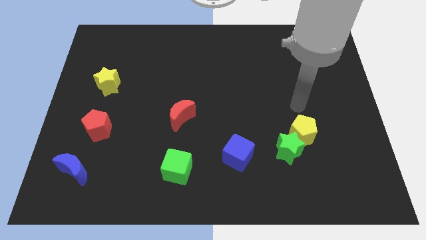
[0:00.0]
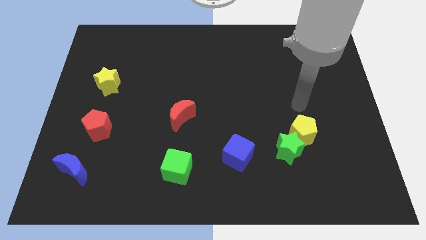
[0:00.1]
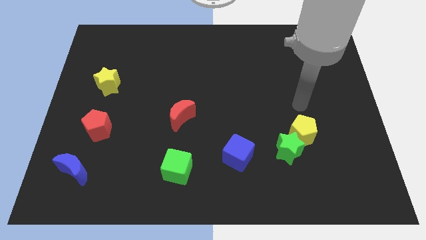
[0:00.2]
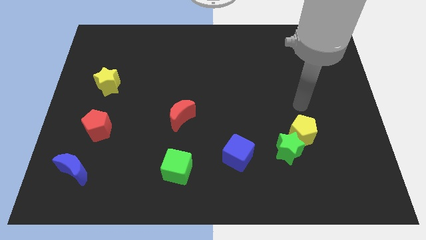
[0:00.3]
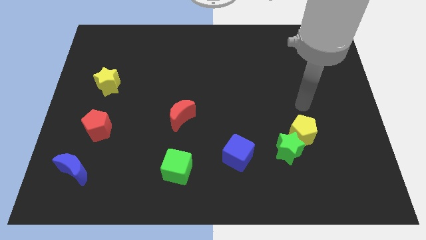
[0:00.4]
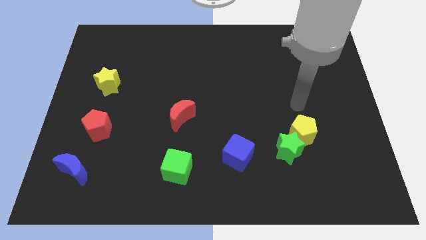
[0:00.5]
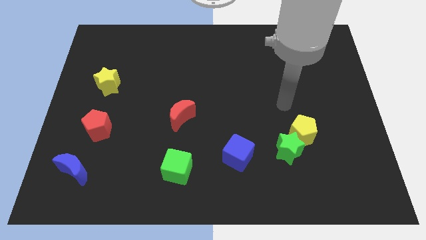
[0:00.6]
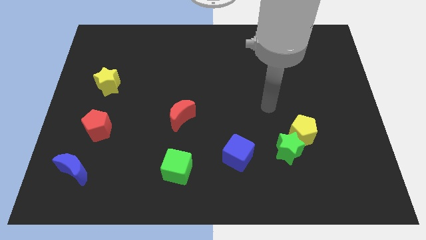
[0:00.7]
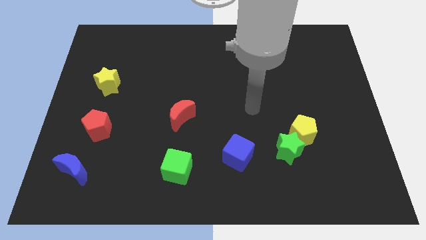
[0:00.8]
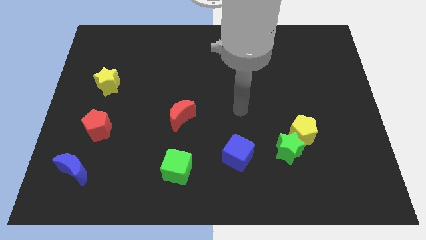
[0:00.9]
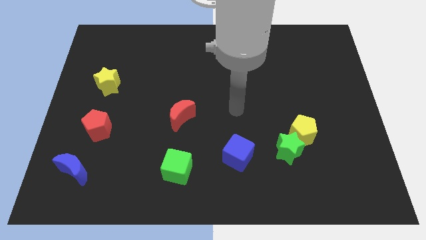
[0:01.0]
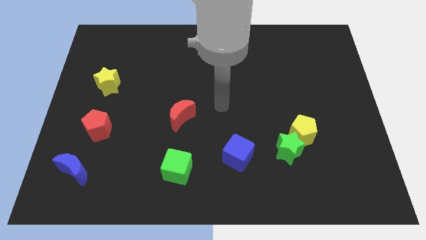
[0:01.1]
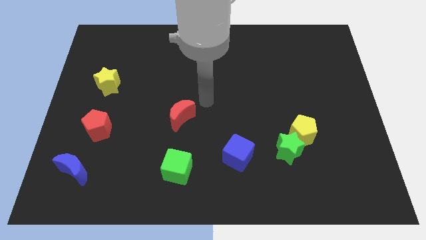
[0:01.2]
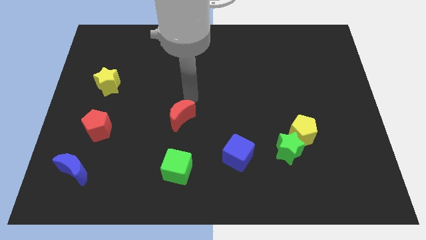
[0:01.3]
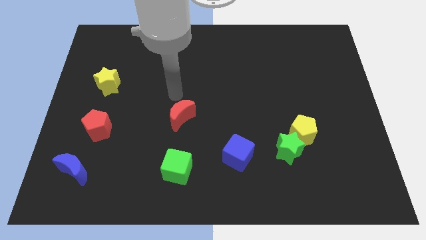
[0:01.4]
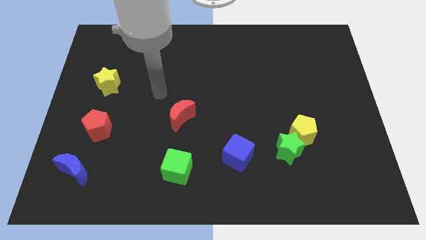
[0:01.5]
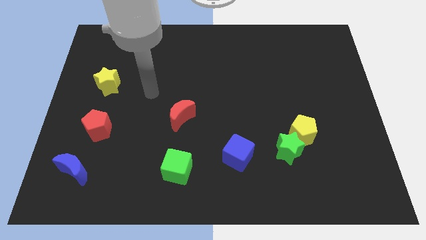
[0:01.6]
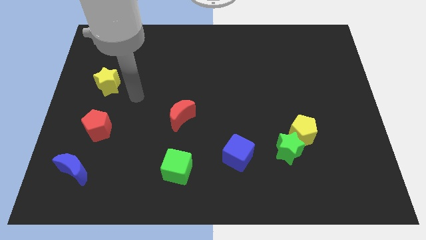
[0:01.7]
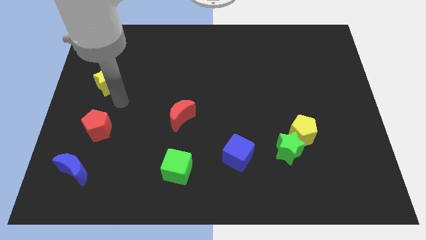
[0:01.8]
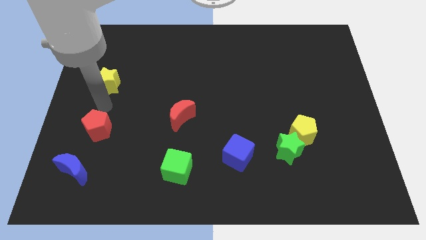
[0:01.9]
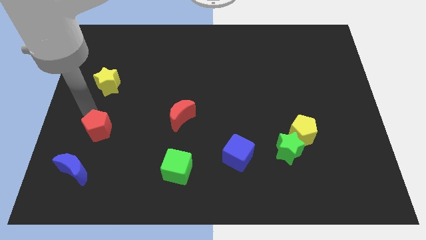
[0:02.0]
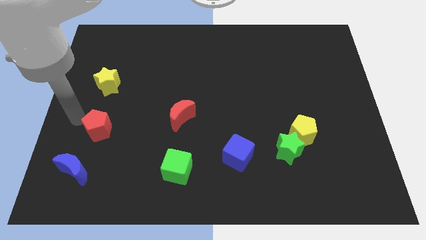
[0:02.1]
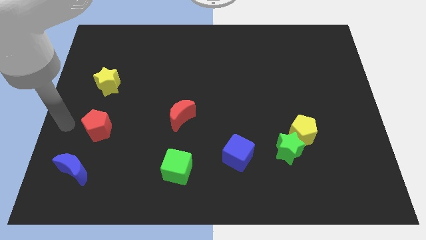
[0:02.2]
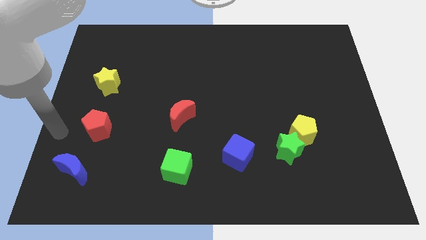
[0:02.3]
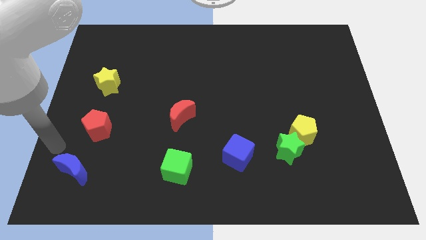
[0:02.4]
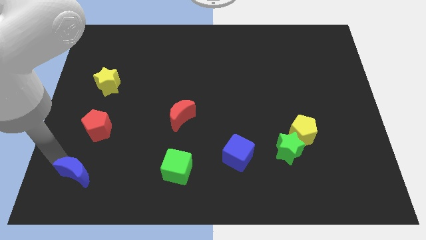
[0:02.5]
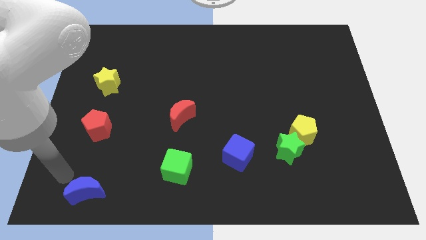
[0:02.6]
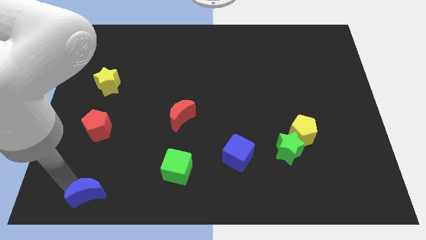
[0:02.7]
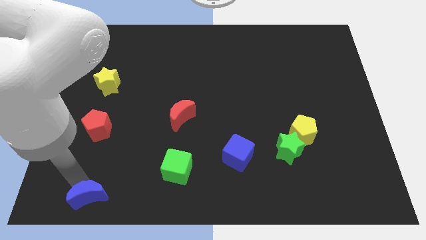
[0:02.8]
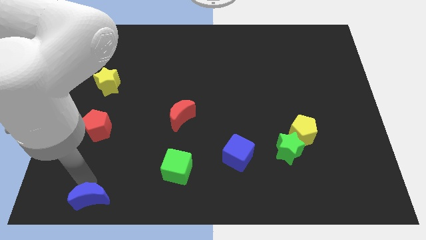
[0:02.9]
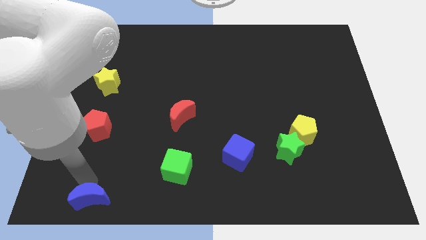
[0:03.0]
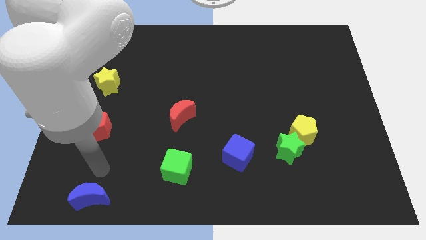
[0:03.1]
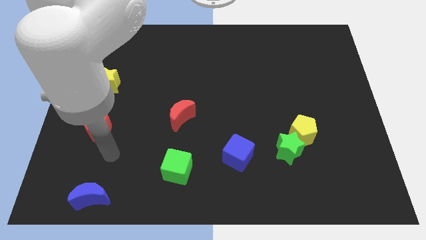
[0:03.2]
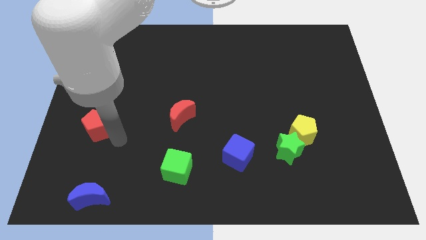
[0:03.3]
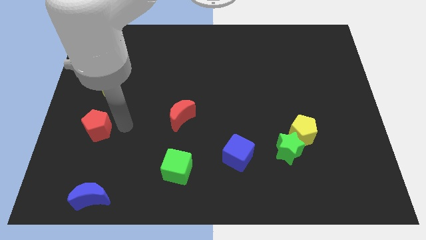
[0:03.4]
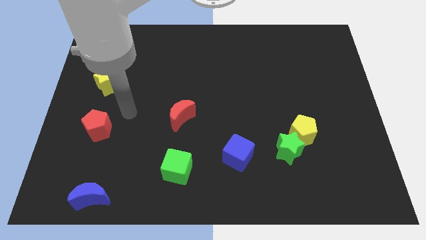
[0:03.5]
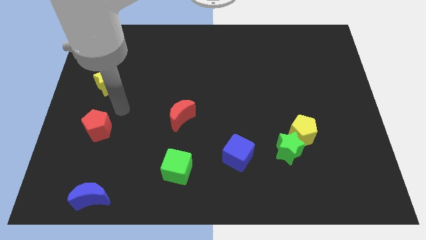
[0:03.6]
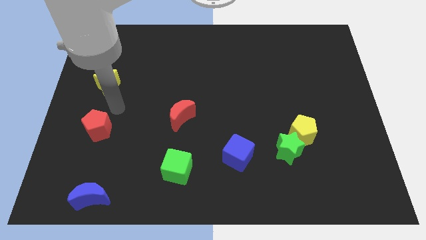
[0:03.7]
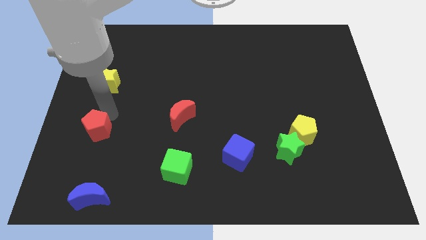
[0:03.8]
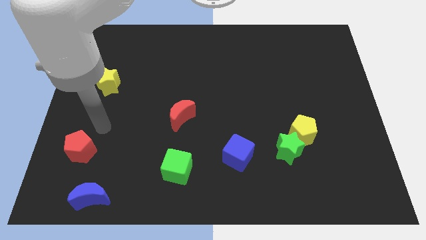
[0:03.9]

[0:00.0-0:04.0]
move the blue moon to the bottom left side of the board

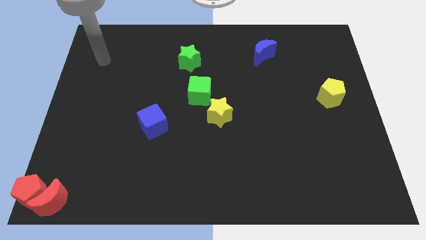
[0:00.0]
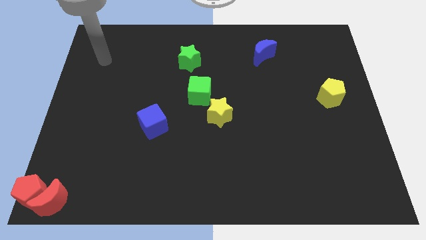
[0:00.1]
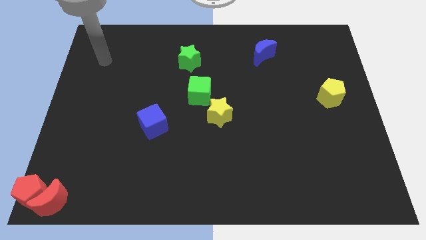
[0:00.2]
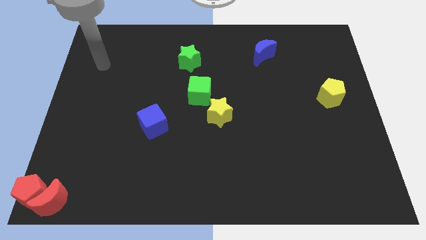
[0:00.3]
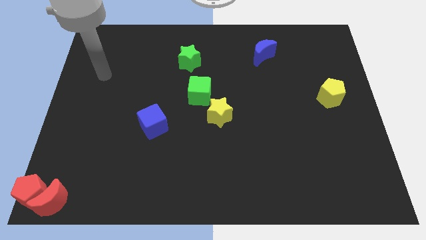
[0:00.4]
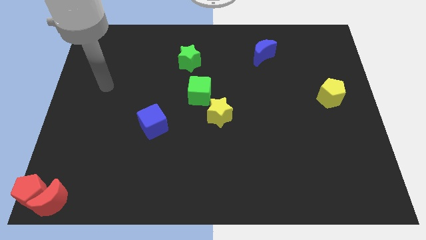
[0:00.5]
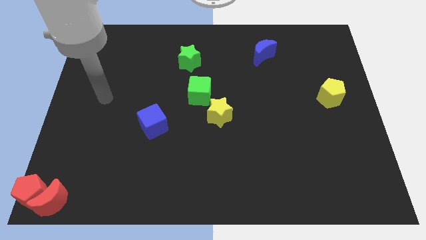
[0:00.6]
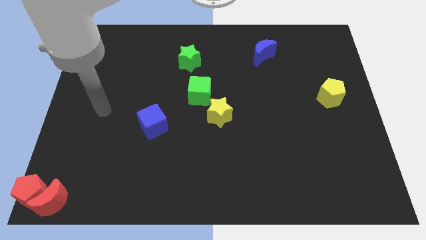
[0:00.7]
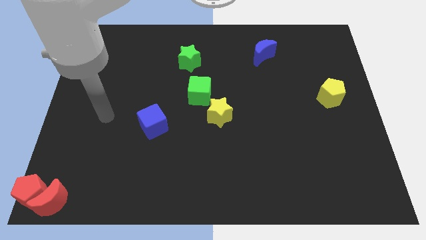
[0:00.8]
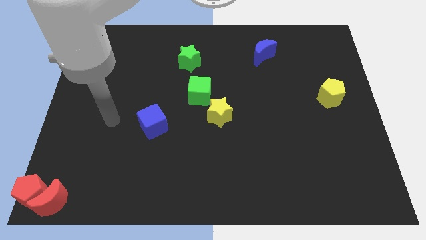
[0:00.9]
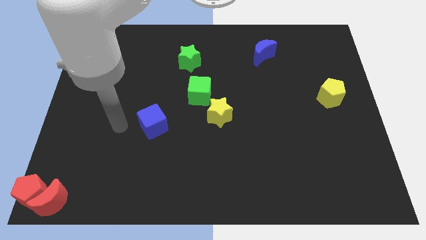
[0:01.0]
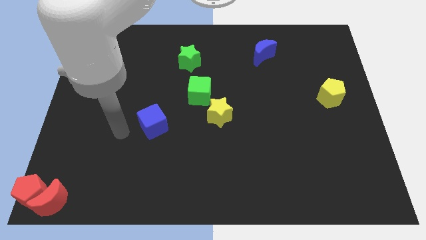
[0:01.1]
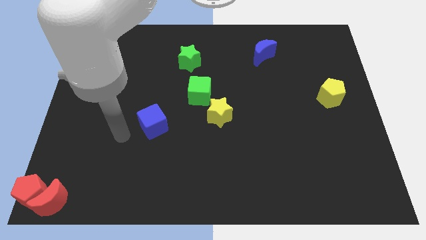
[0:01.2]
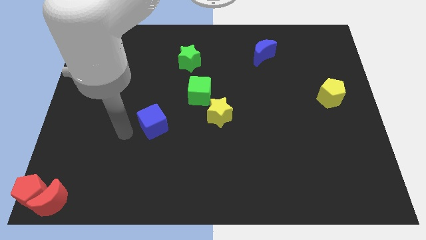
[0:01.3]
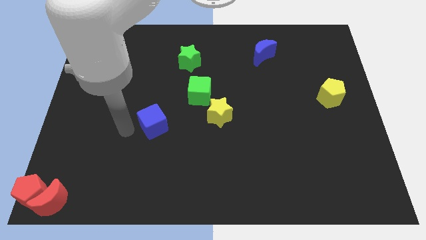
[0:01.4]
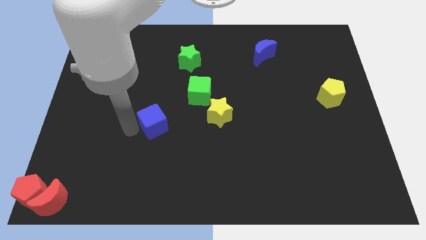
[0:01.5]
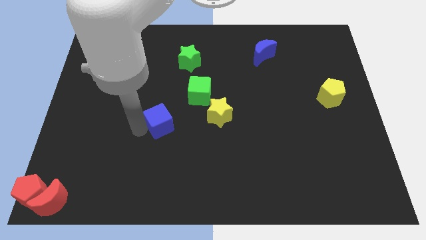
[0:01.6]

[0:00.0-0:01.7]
tap the blue cube on left

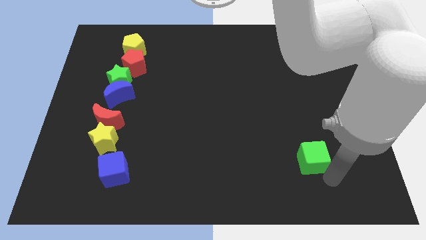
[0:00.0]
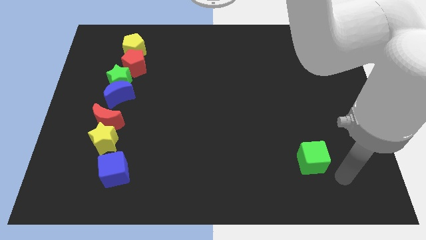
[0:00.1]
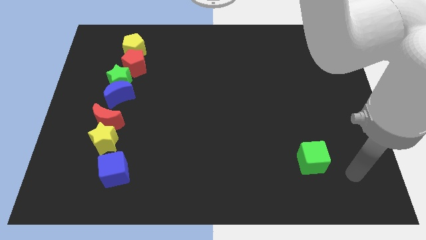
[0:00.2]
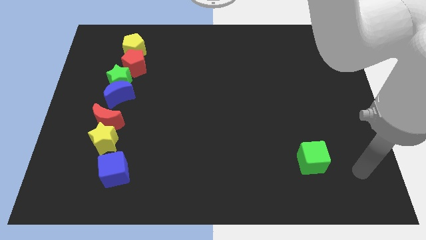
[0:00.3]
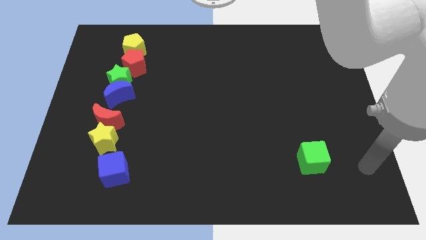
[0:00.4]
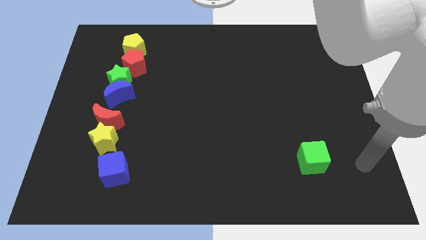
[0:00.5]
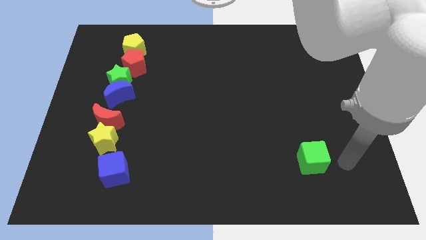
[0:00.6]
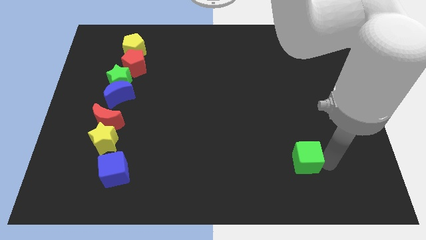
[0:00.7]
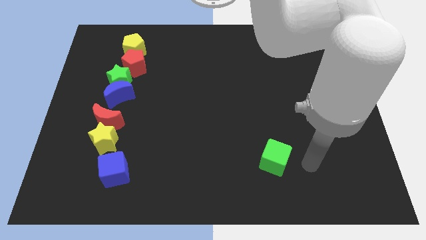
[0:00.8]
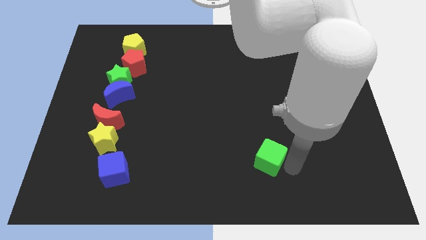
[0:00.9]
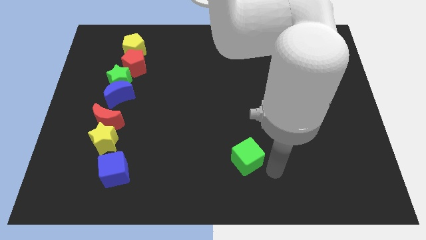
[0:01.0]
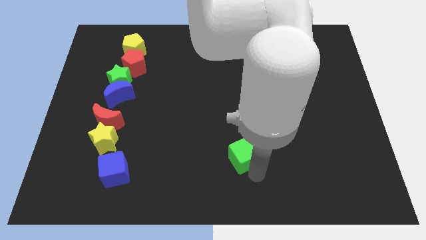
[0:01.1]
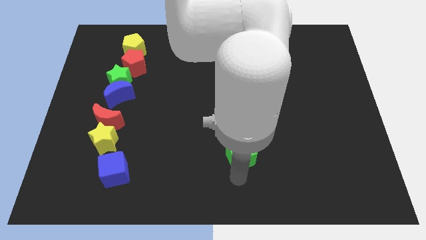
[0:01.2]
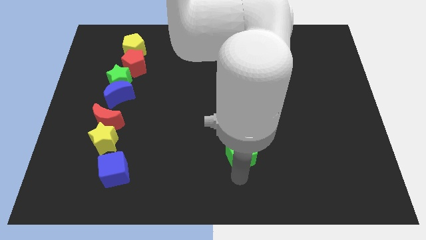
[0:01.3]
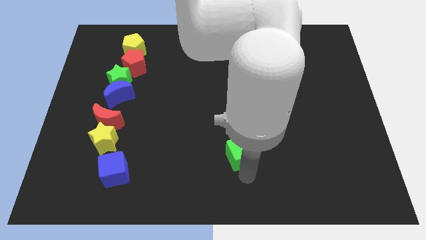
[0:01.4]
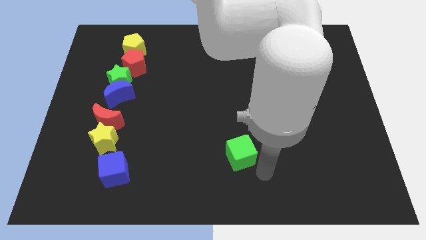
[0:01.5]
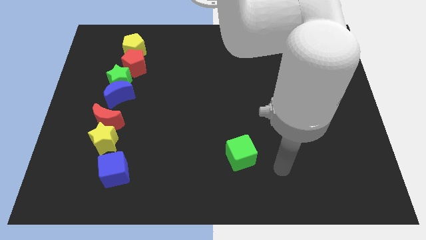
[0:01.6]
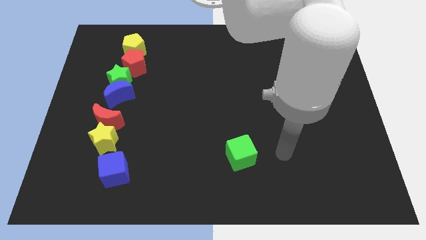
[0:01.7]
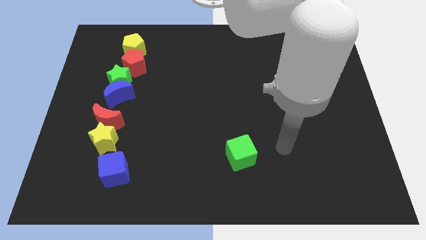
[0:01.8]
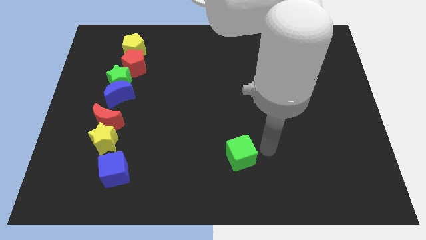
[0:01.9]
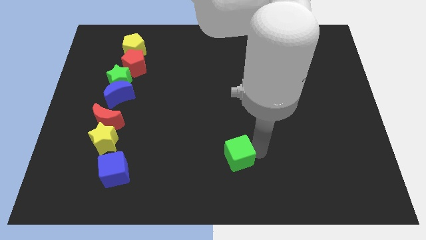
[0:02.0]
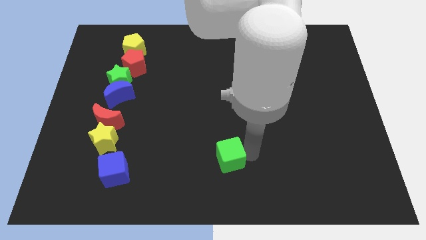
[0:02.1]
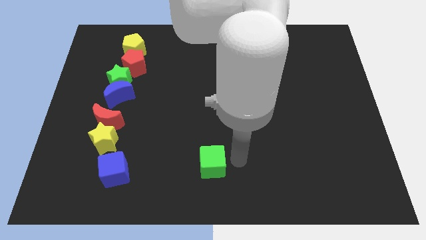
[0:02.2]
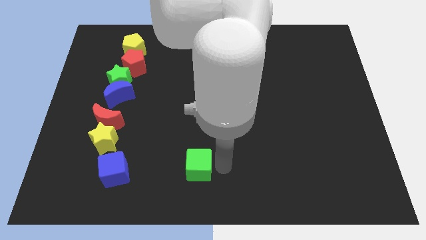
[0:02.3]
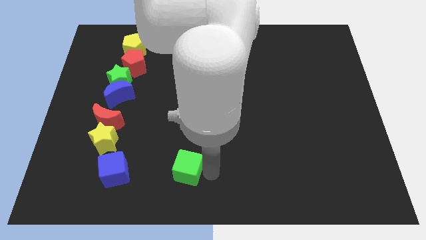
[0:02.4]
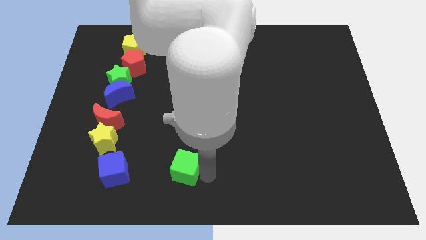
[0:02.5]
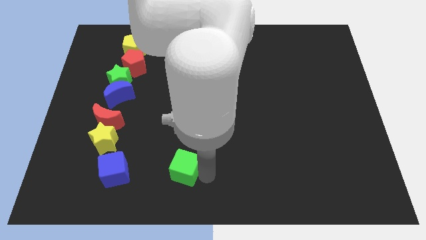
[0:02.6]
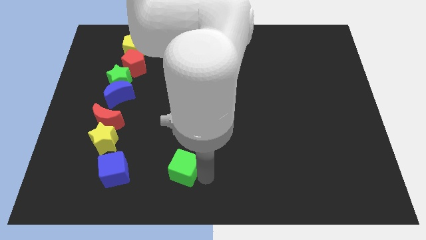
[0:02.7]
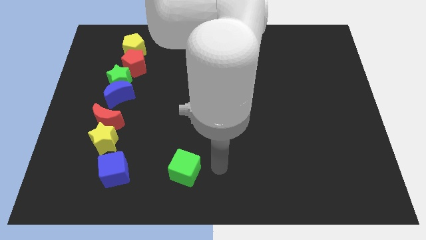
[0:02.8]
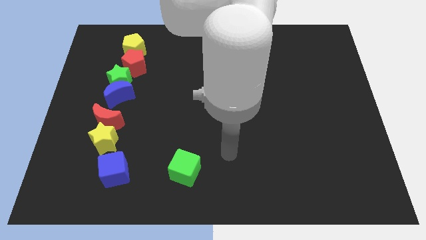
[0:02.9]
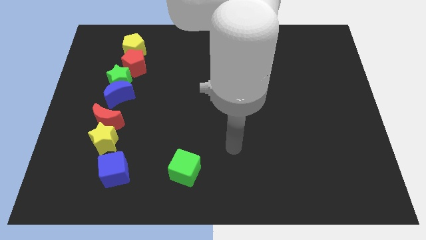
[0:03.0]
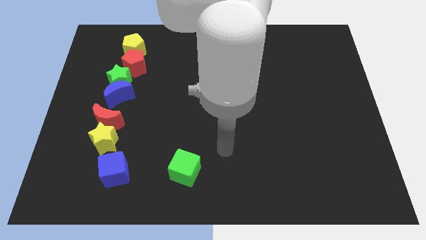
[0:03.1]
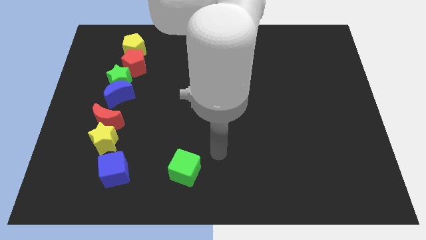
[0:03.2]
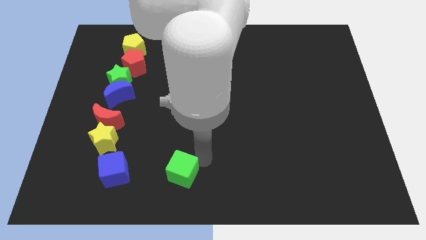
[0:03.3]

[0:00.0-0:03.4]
place the green cube to the right of the blue cube
